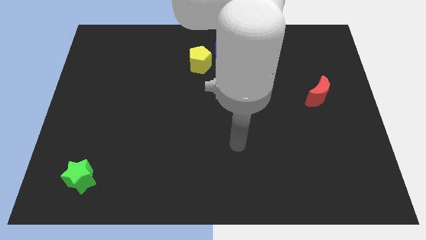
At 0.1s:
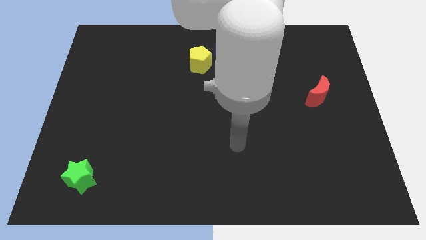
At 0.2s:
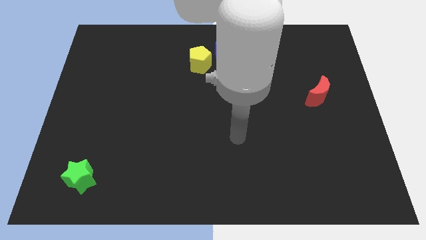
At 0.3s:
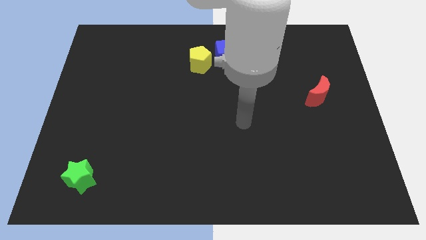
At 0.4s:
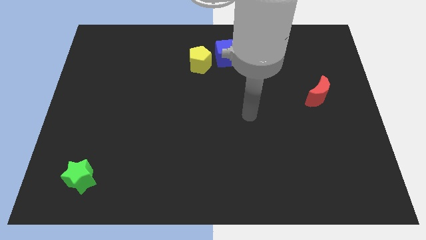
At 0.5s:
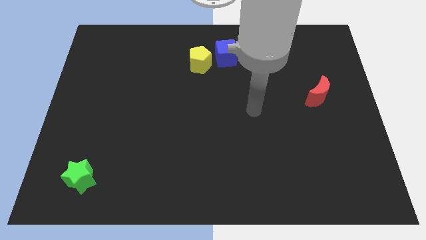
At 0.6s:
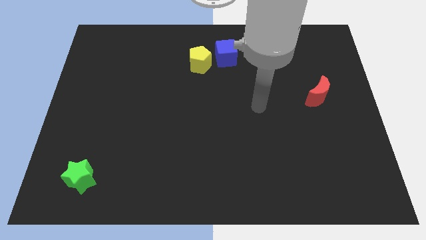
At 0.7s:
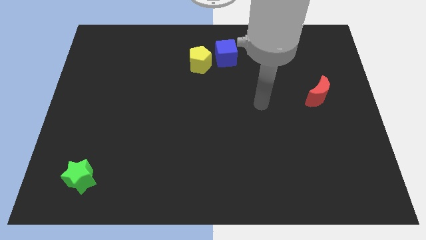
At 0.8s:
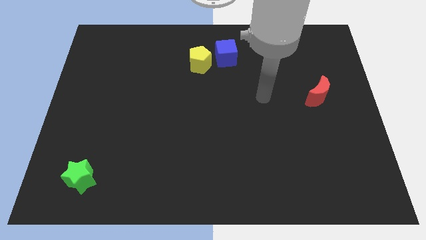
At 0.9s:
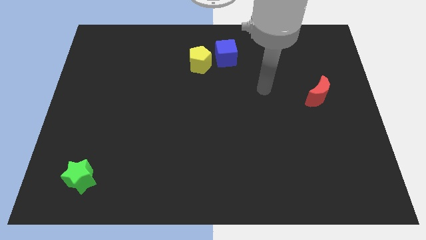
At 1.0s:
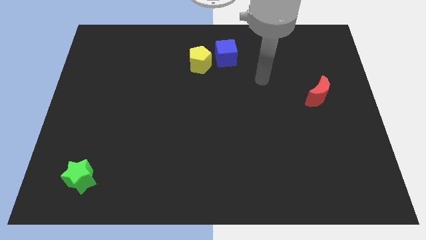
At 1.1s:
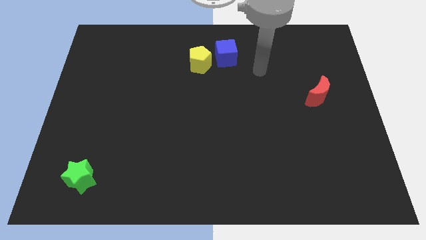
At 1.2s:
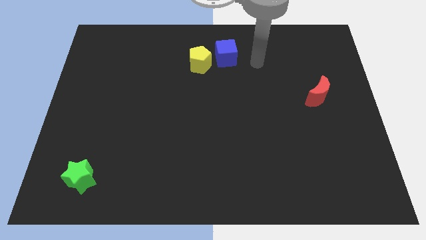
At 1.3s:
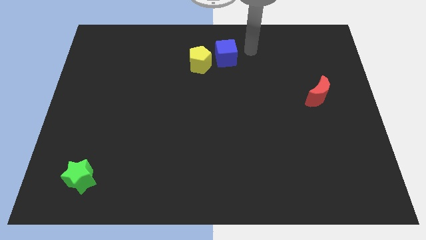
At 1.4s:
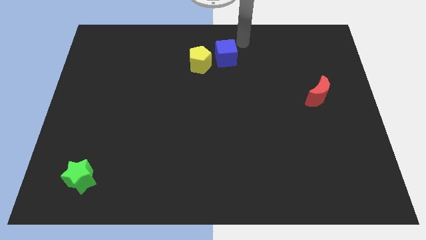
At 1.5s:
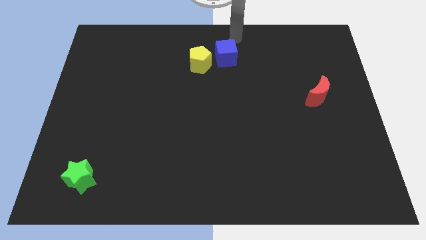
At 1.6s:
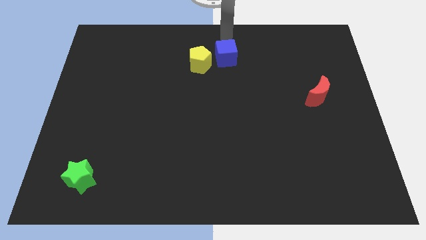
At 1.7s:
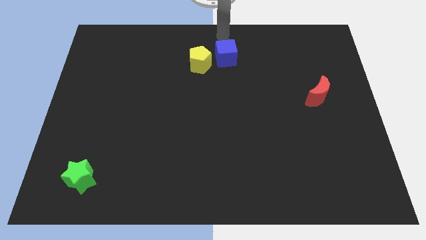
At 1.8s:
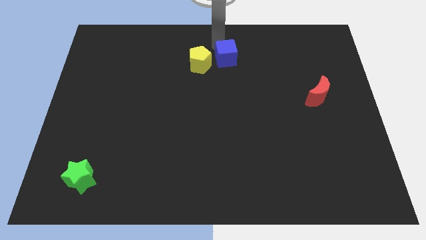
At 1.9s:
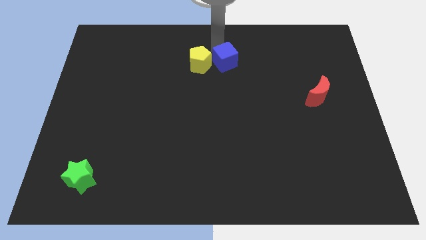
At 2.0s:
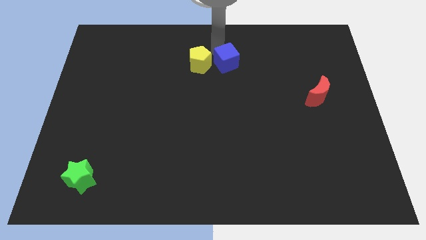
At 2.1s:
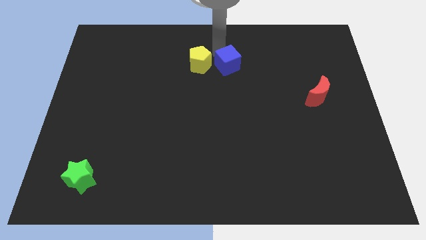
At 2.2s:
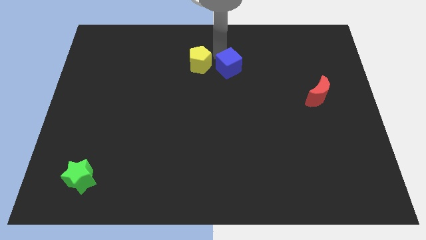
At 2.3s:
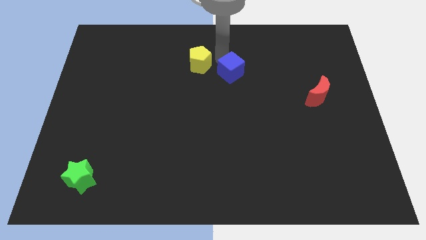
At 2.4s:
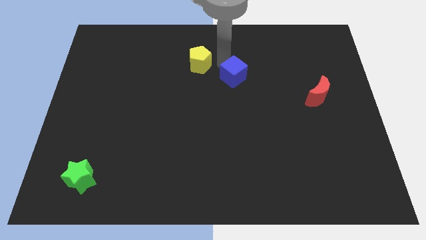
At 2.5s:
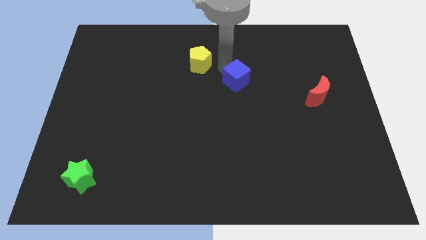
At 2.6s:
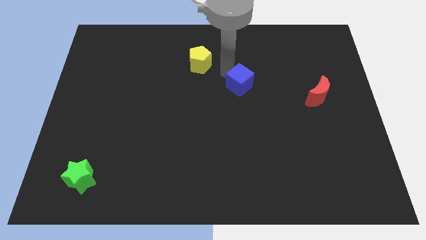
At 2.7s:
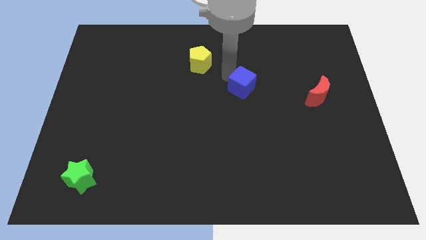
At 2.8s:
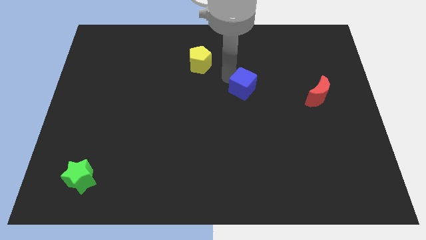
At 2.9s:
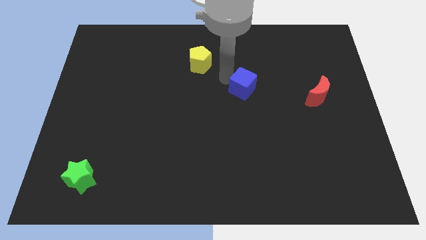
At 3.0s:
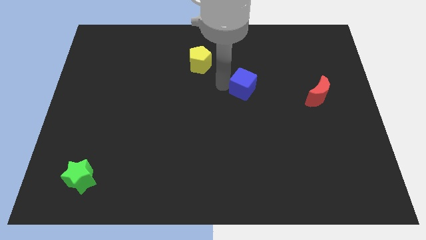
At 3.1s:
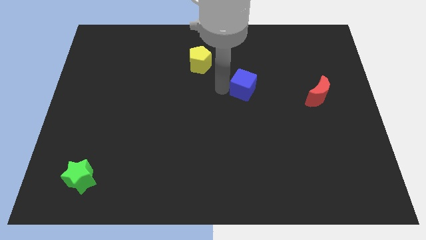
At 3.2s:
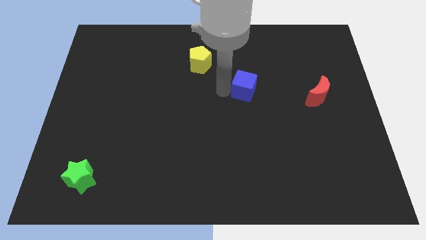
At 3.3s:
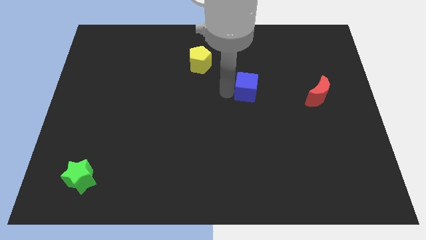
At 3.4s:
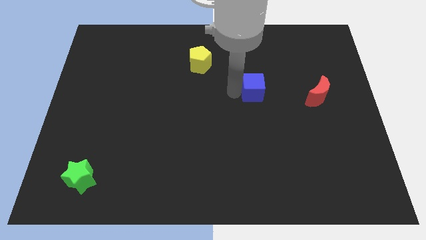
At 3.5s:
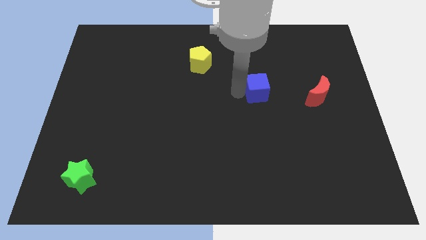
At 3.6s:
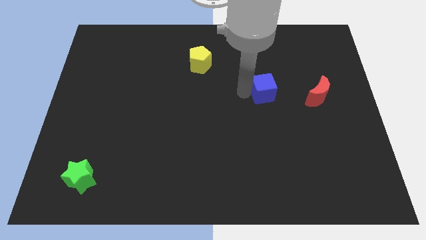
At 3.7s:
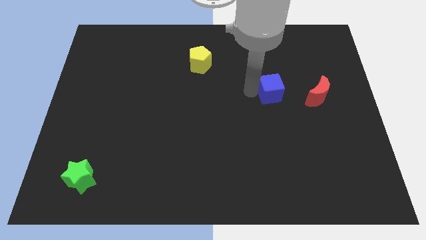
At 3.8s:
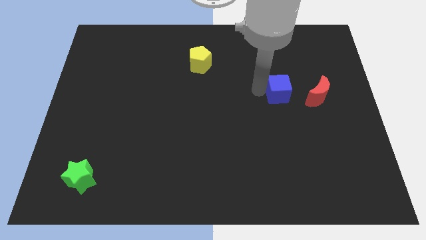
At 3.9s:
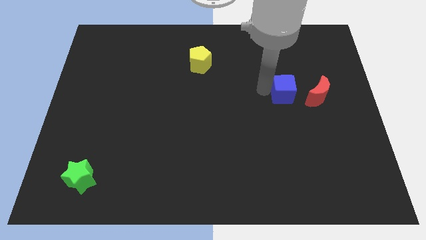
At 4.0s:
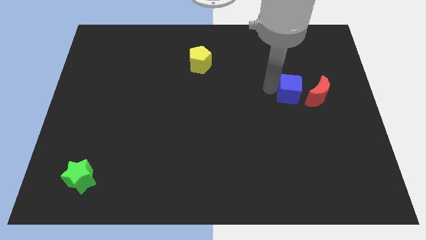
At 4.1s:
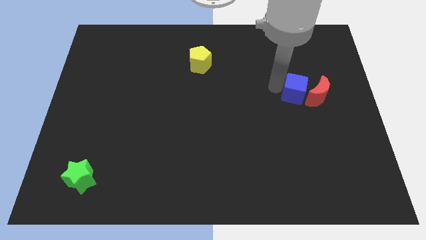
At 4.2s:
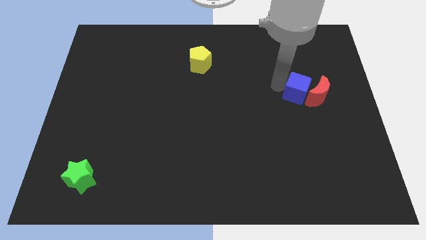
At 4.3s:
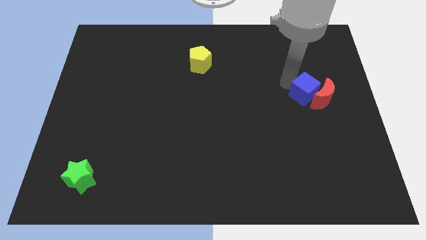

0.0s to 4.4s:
move the blue block towards the moon

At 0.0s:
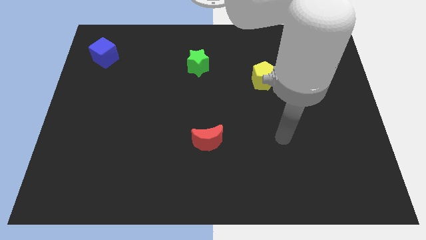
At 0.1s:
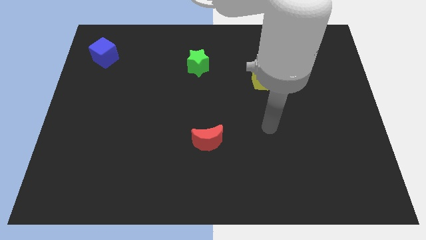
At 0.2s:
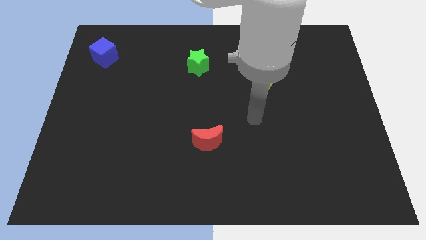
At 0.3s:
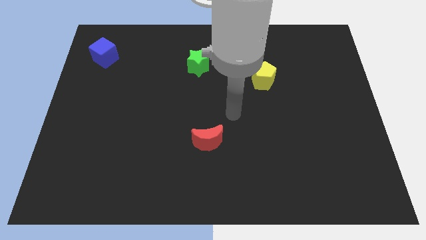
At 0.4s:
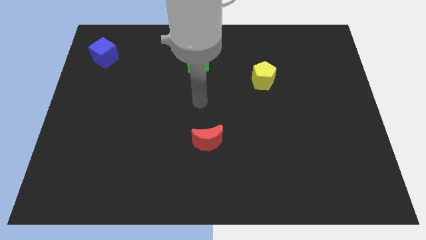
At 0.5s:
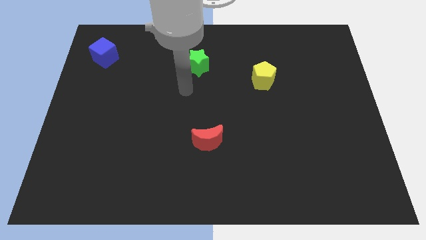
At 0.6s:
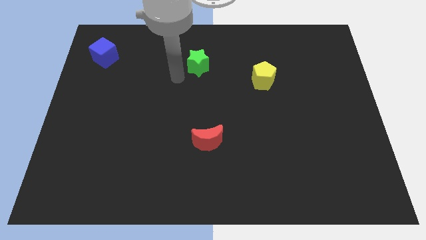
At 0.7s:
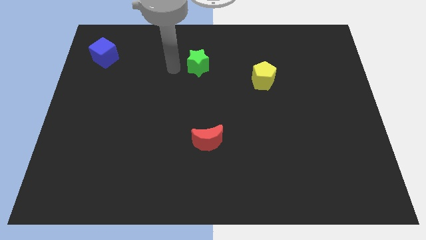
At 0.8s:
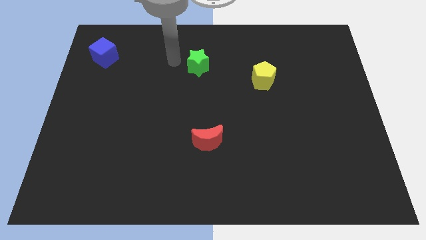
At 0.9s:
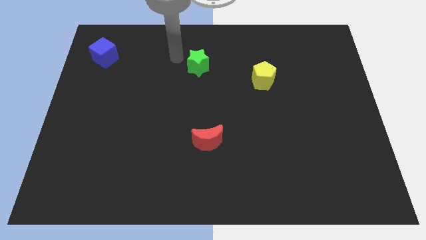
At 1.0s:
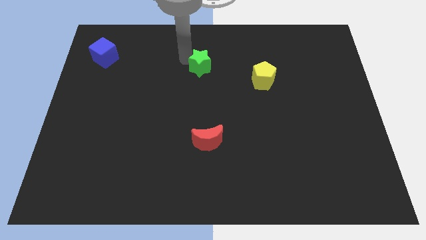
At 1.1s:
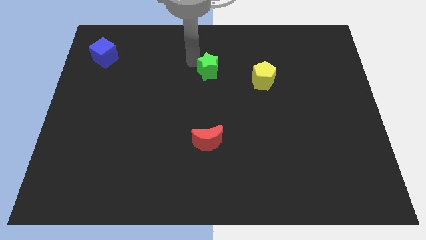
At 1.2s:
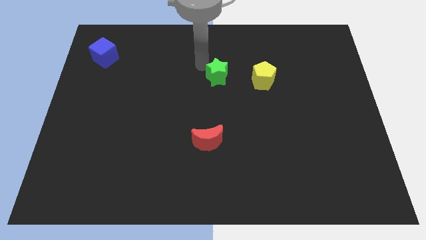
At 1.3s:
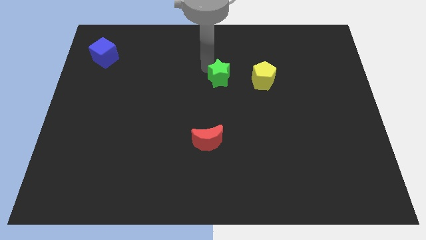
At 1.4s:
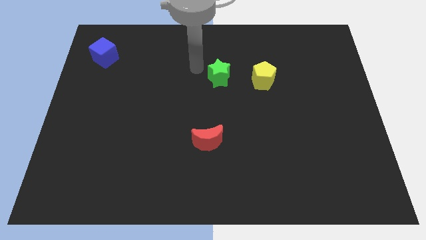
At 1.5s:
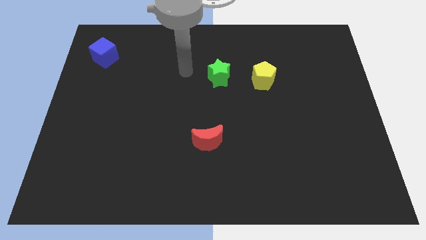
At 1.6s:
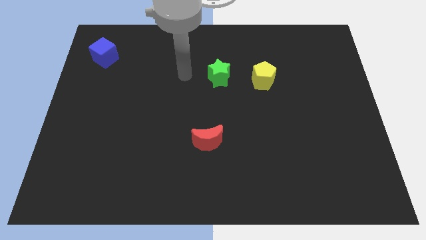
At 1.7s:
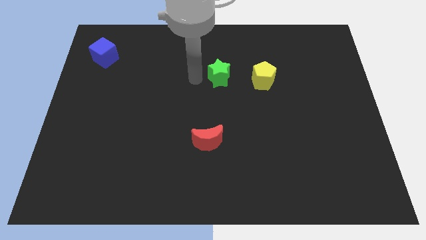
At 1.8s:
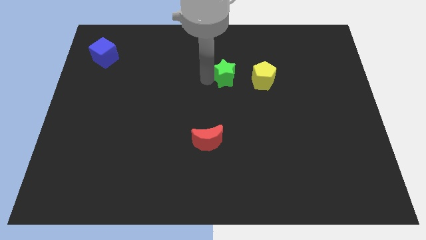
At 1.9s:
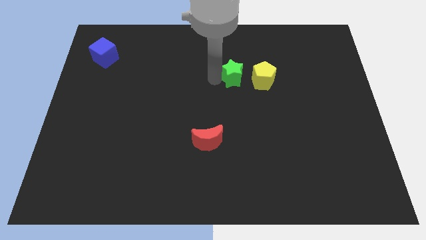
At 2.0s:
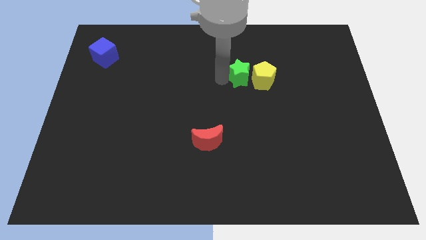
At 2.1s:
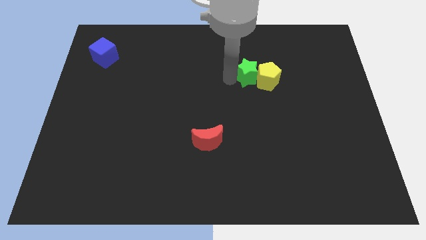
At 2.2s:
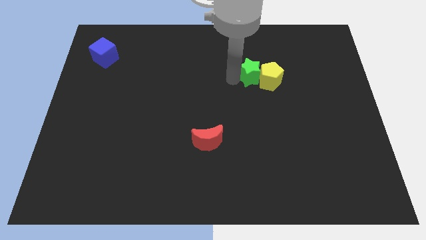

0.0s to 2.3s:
push the green block close to the yellow pentagon

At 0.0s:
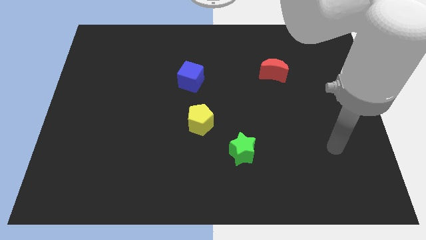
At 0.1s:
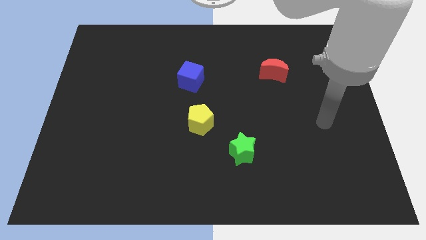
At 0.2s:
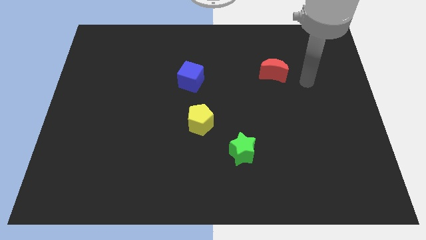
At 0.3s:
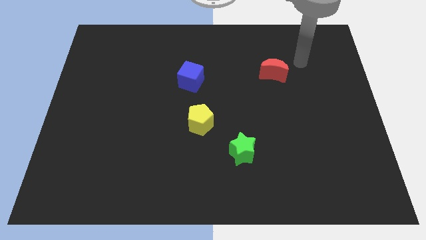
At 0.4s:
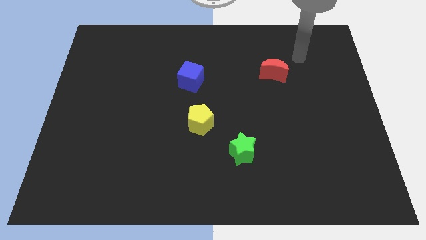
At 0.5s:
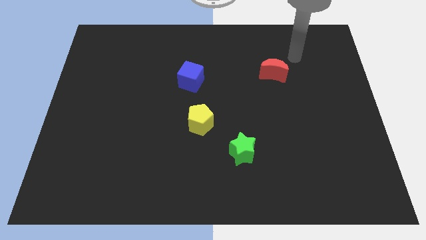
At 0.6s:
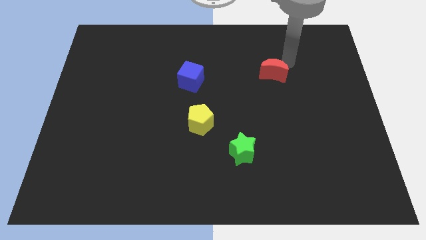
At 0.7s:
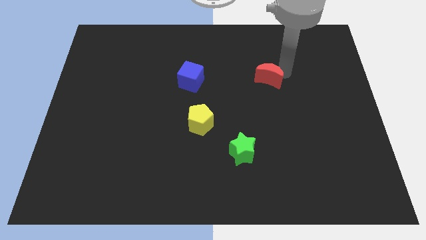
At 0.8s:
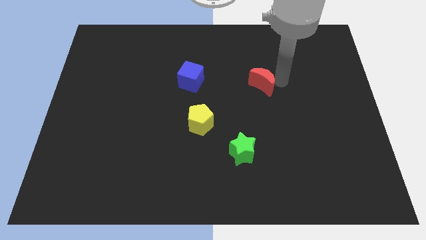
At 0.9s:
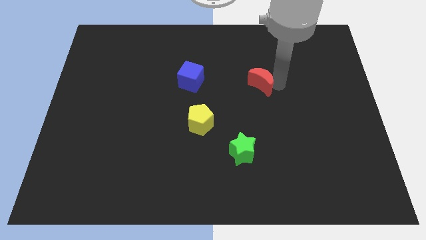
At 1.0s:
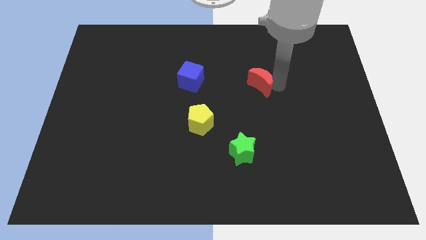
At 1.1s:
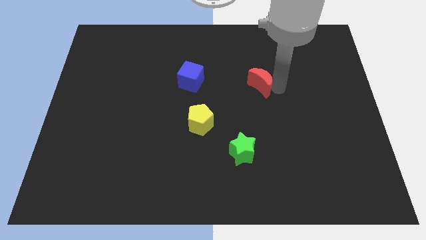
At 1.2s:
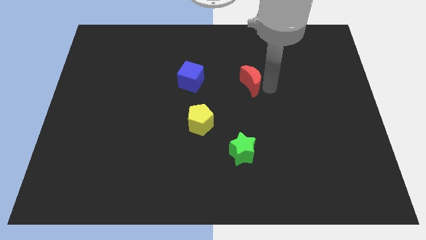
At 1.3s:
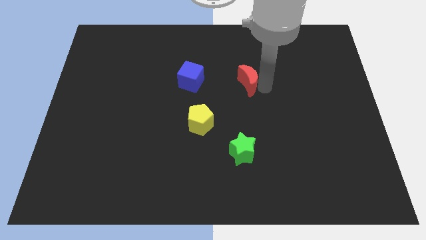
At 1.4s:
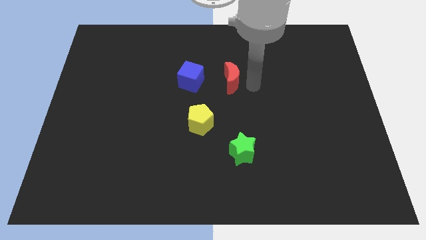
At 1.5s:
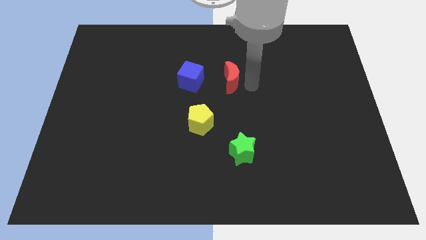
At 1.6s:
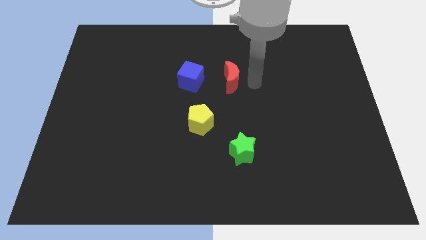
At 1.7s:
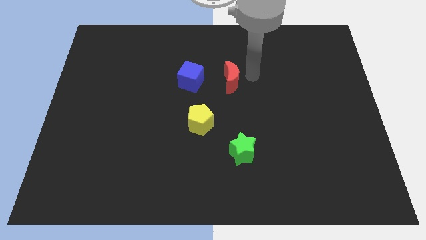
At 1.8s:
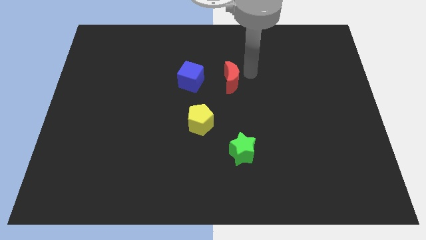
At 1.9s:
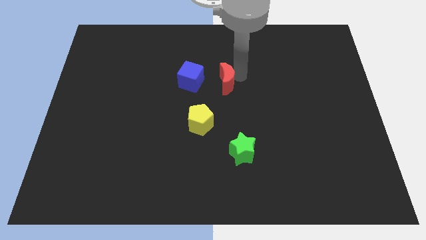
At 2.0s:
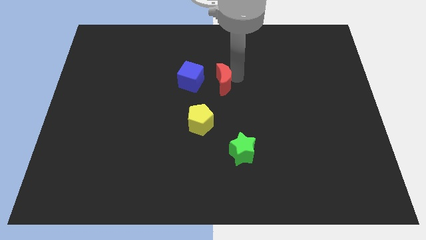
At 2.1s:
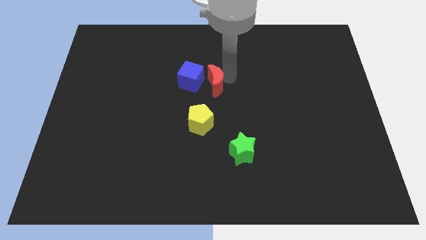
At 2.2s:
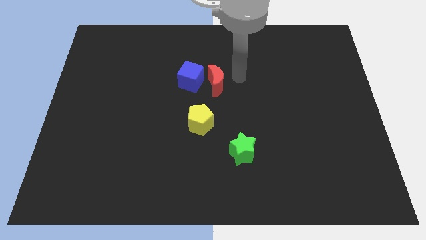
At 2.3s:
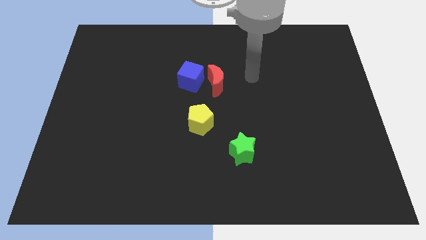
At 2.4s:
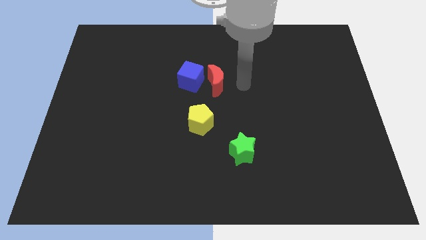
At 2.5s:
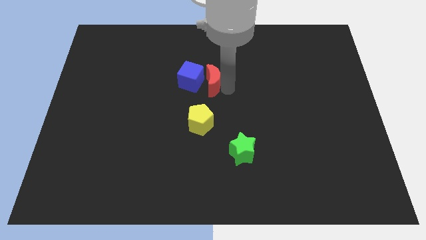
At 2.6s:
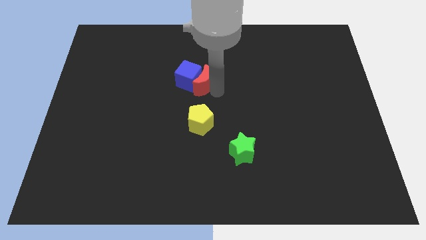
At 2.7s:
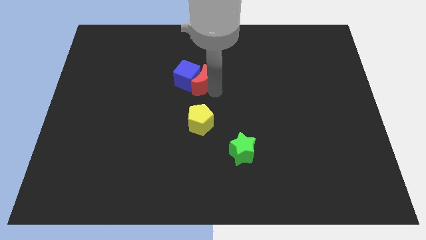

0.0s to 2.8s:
slide the red block next to the blue block
